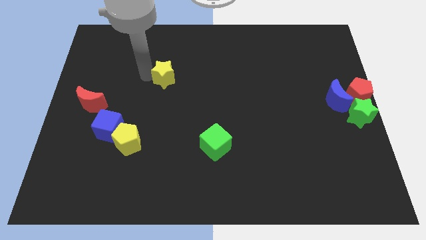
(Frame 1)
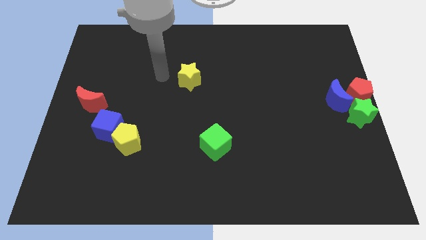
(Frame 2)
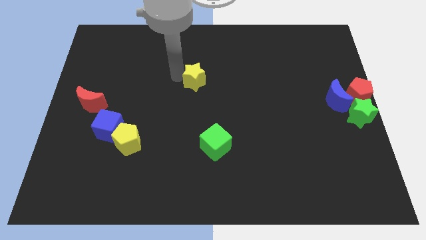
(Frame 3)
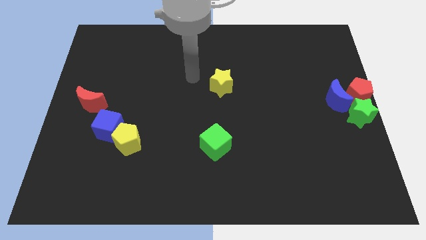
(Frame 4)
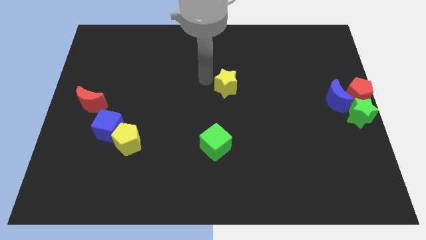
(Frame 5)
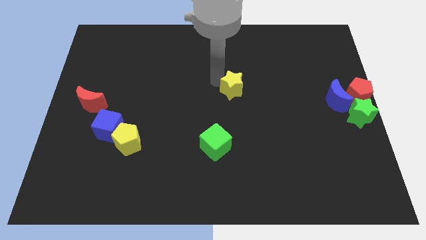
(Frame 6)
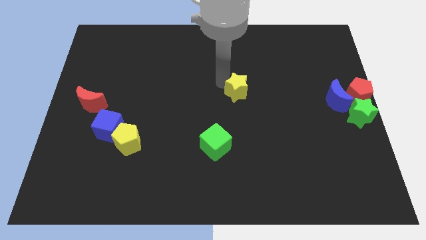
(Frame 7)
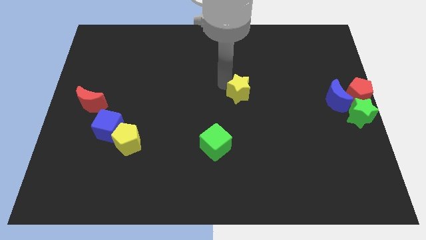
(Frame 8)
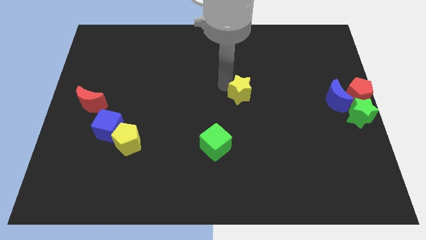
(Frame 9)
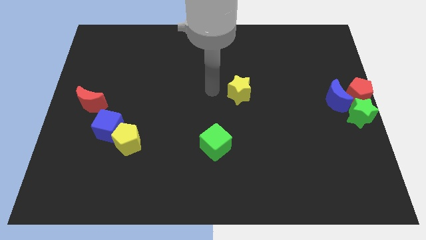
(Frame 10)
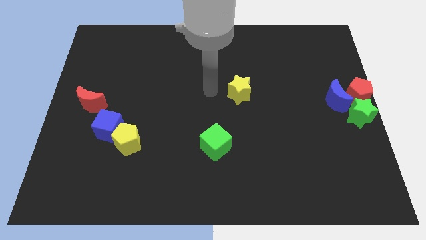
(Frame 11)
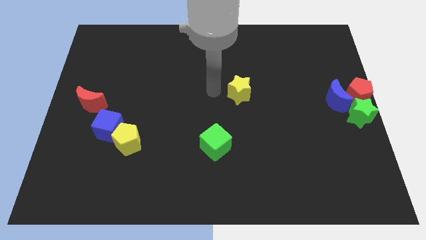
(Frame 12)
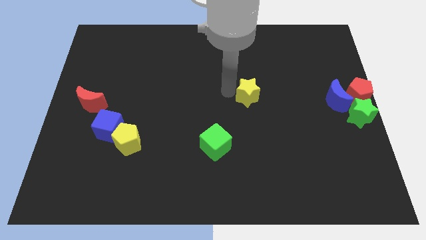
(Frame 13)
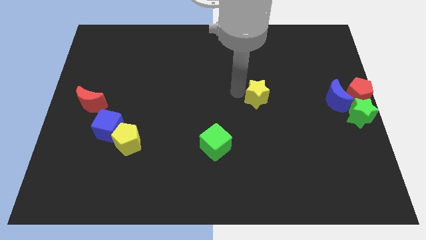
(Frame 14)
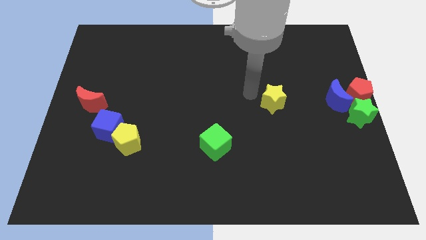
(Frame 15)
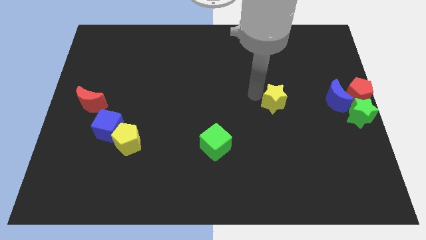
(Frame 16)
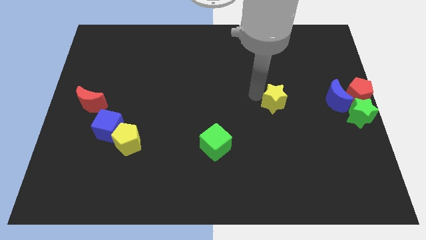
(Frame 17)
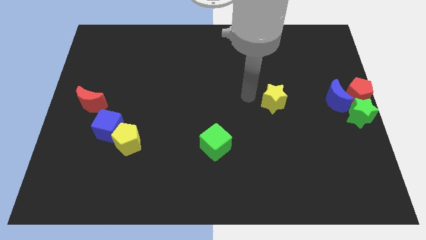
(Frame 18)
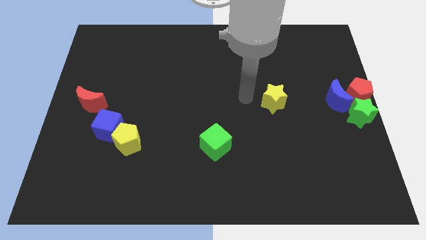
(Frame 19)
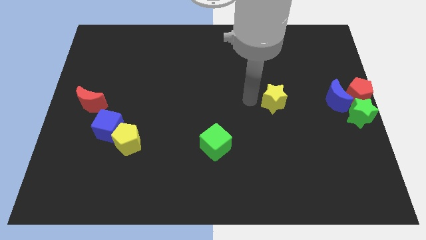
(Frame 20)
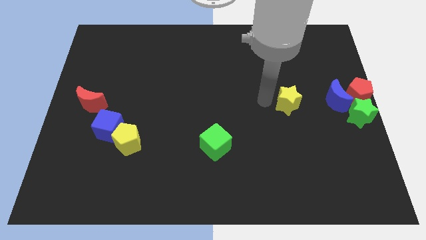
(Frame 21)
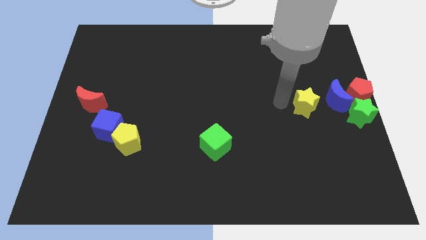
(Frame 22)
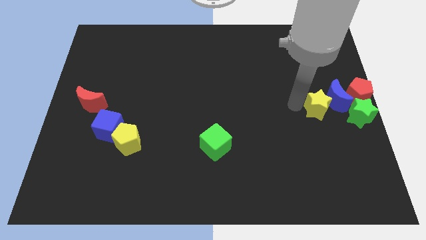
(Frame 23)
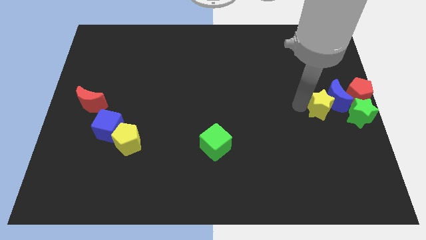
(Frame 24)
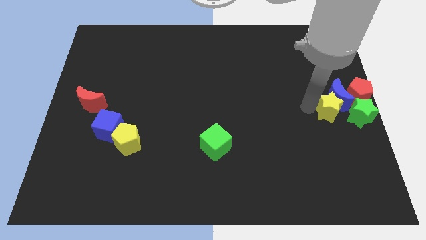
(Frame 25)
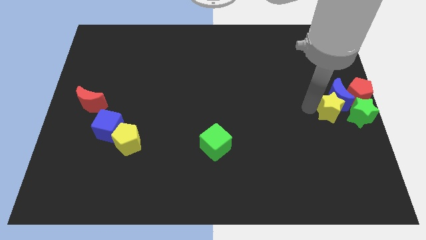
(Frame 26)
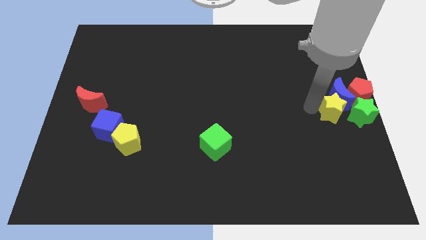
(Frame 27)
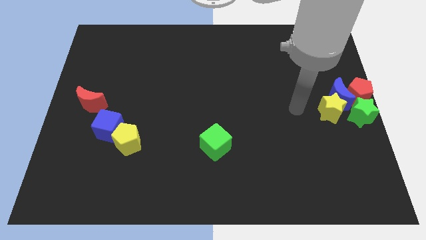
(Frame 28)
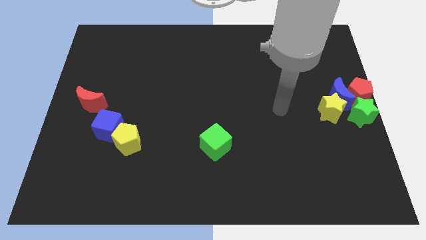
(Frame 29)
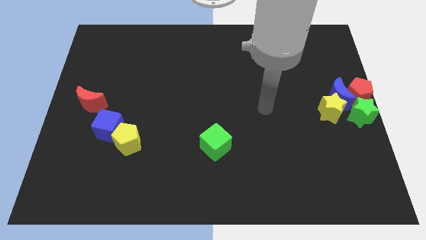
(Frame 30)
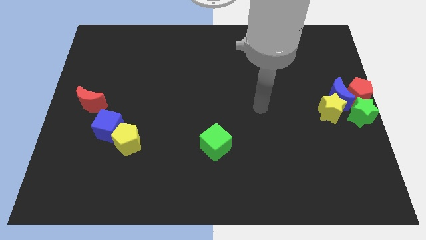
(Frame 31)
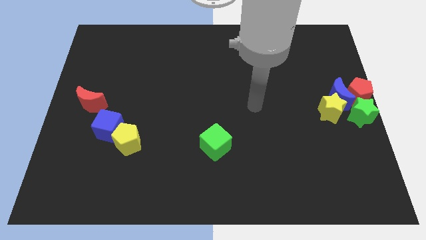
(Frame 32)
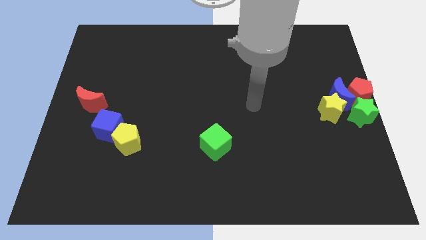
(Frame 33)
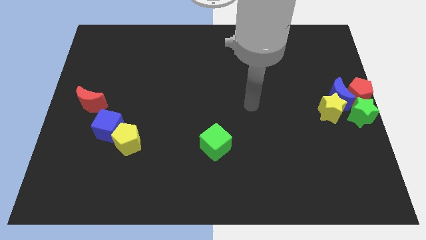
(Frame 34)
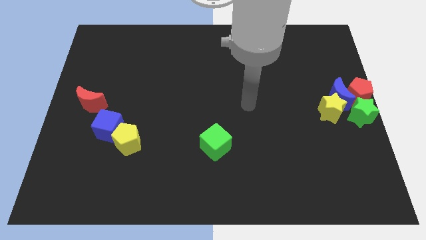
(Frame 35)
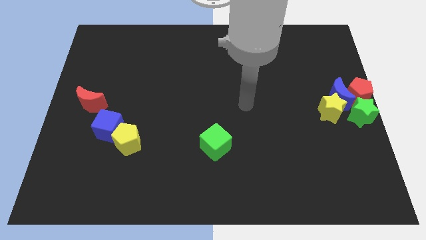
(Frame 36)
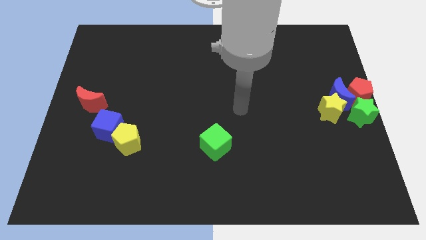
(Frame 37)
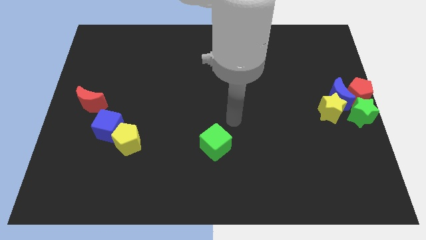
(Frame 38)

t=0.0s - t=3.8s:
place yellow star to the bottom of blue moon

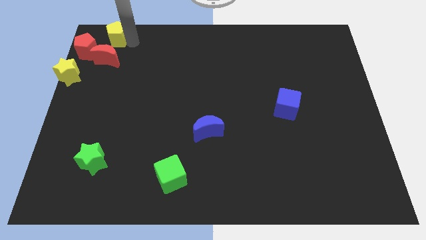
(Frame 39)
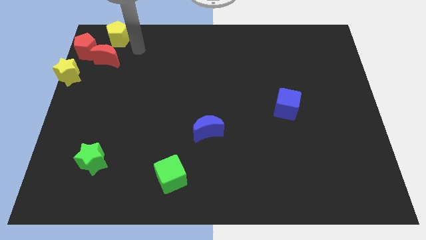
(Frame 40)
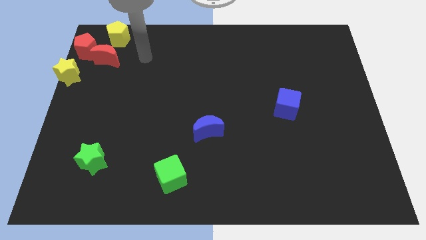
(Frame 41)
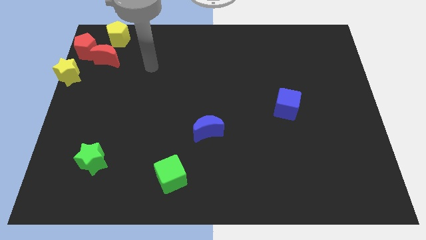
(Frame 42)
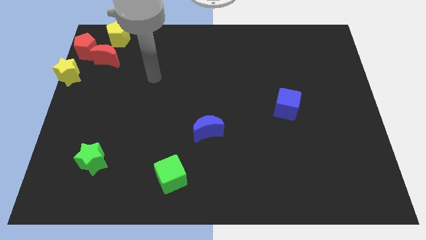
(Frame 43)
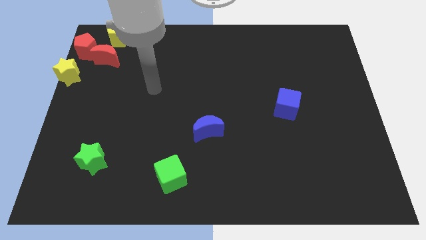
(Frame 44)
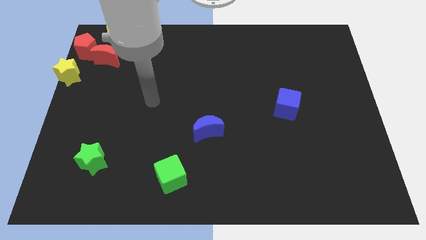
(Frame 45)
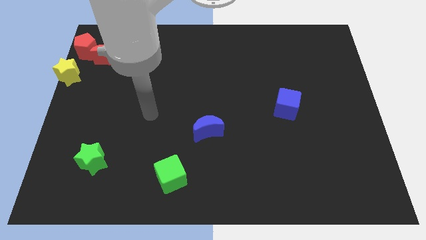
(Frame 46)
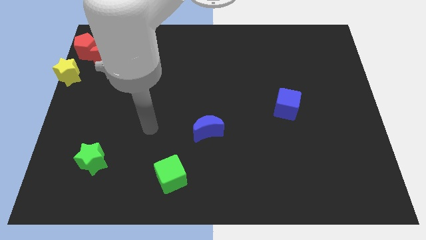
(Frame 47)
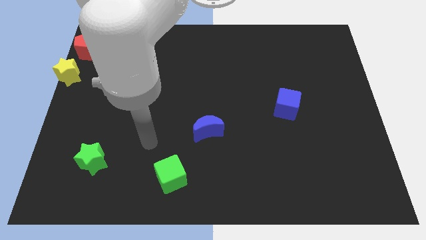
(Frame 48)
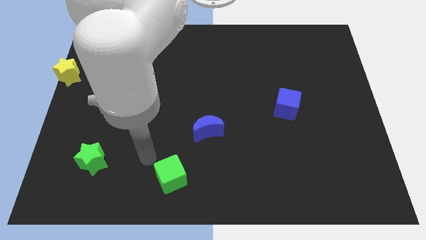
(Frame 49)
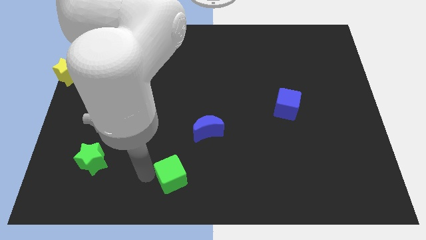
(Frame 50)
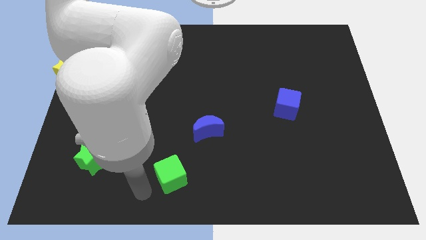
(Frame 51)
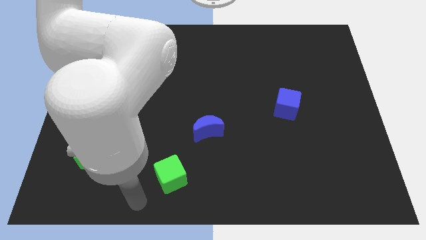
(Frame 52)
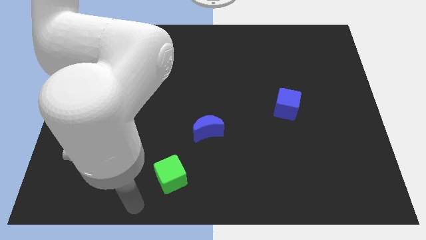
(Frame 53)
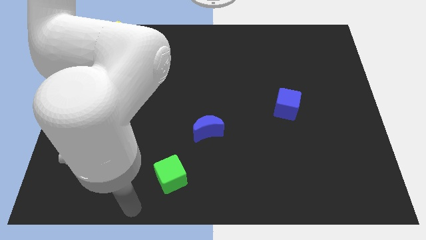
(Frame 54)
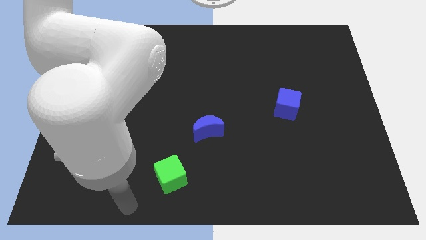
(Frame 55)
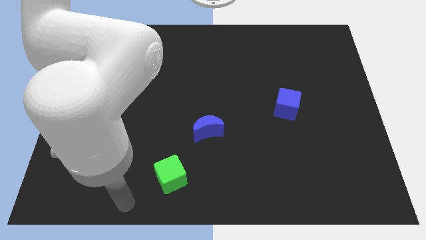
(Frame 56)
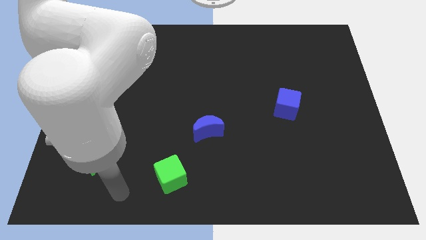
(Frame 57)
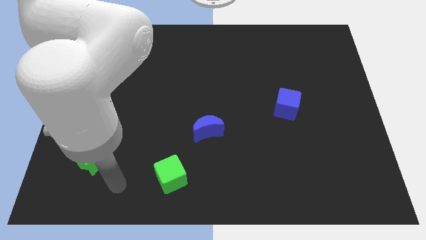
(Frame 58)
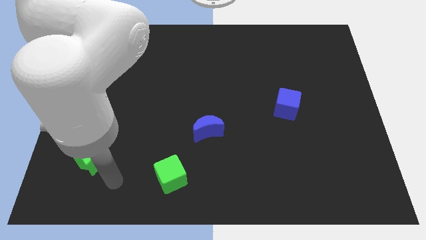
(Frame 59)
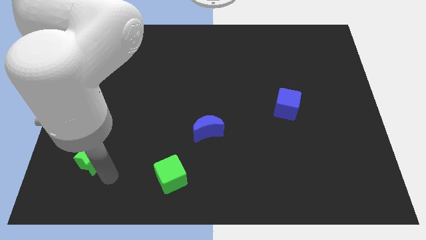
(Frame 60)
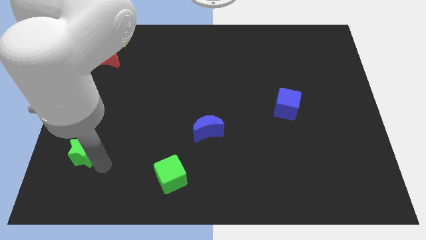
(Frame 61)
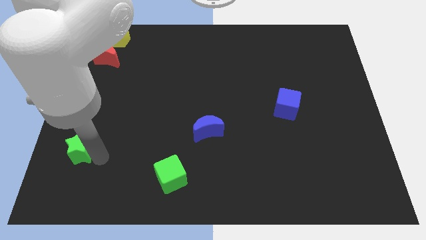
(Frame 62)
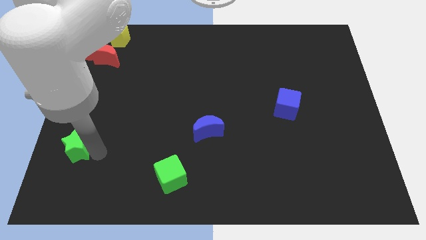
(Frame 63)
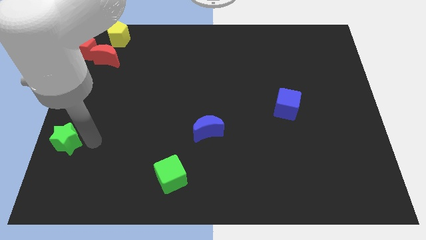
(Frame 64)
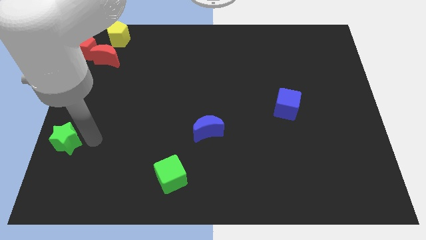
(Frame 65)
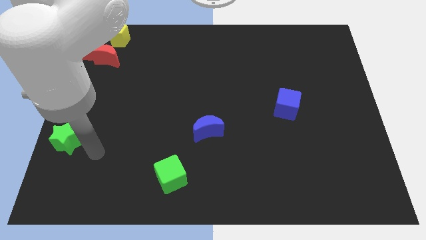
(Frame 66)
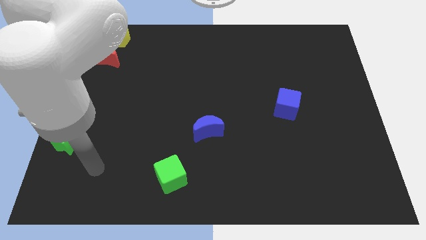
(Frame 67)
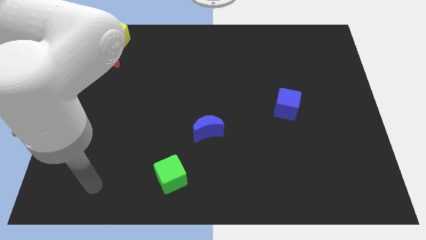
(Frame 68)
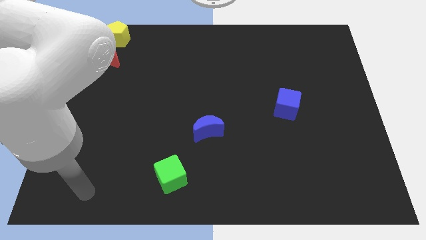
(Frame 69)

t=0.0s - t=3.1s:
move your arm below to the green star

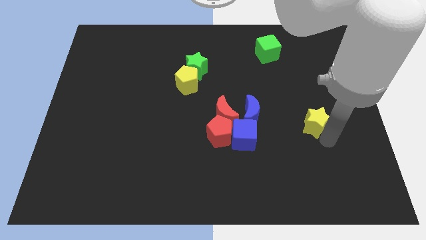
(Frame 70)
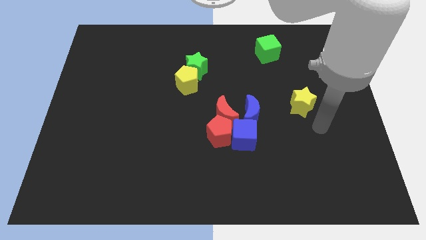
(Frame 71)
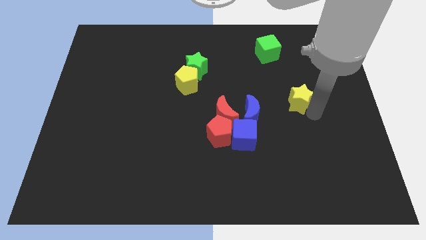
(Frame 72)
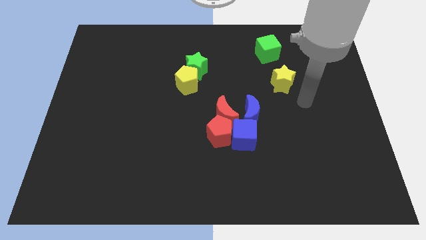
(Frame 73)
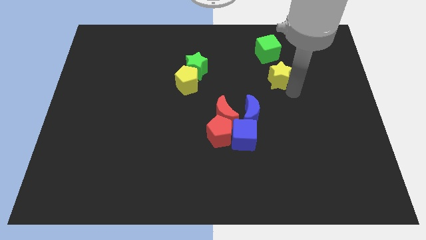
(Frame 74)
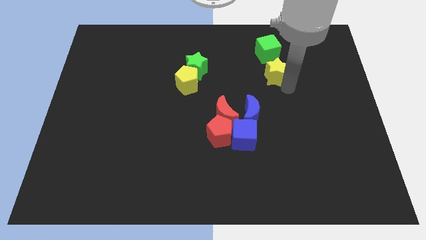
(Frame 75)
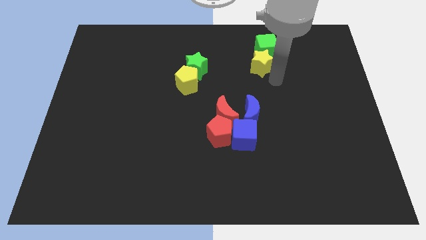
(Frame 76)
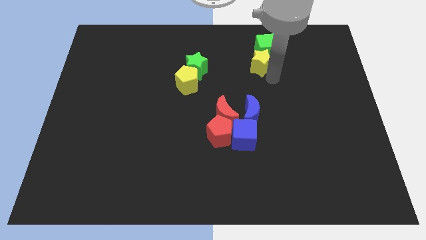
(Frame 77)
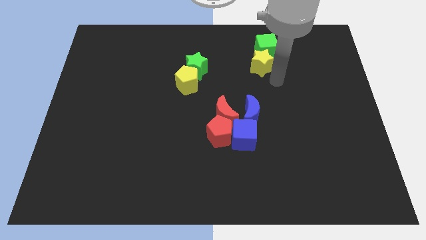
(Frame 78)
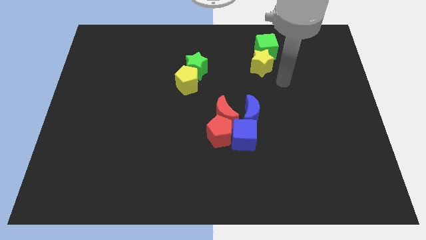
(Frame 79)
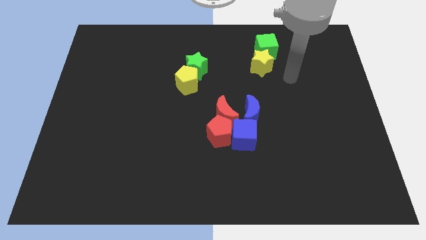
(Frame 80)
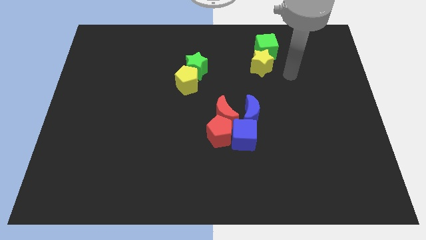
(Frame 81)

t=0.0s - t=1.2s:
push yellow star below green cube

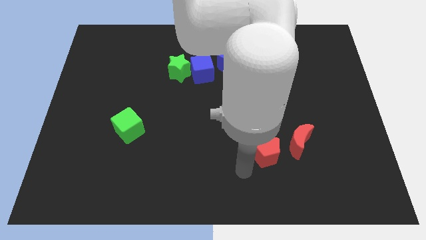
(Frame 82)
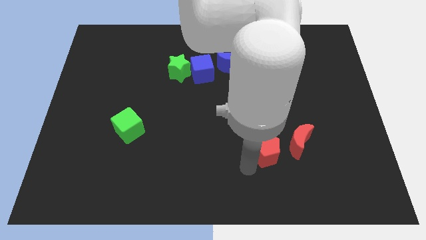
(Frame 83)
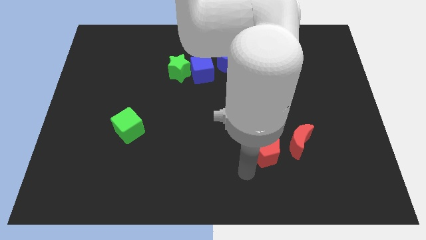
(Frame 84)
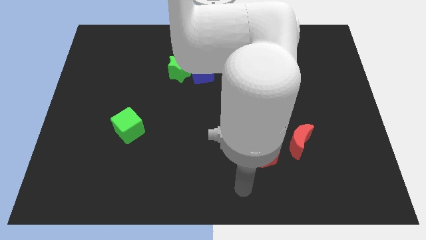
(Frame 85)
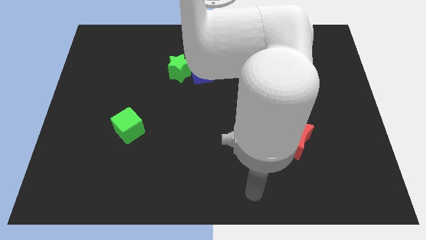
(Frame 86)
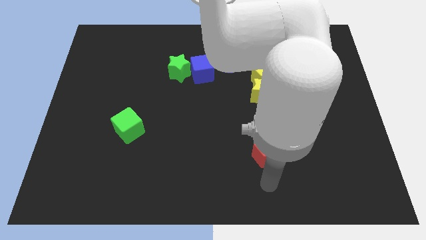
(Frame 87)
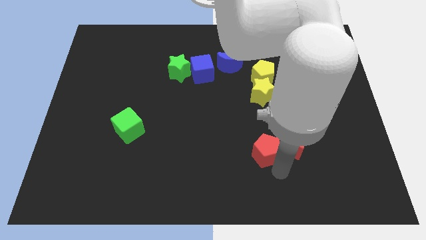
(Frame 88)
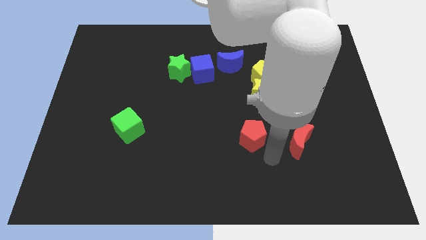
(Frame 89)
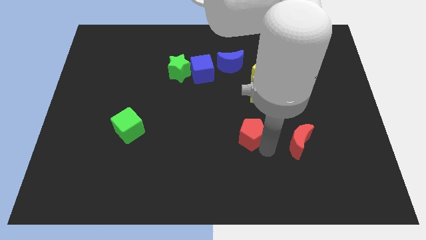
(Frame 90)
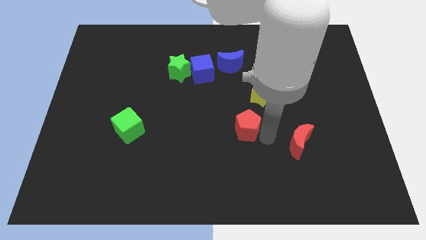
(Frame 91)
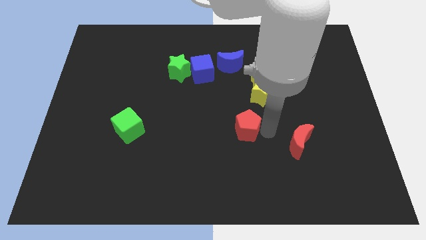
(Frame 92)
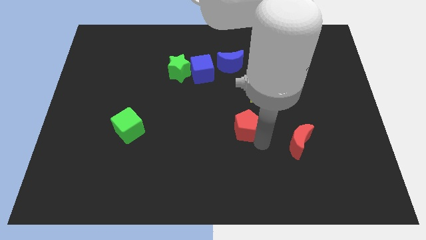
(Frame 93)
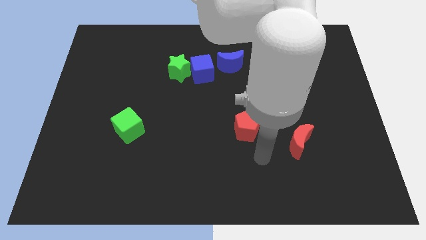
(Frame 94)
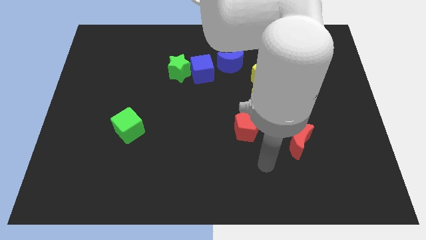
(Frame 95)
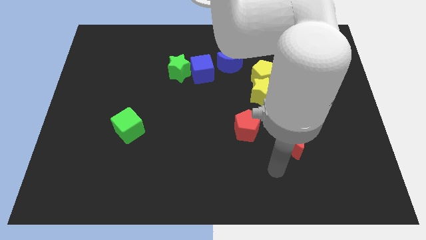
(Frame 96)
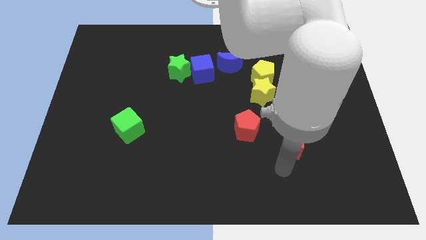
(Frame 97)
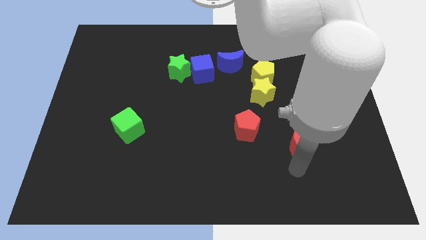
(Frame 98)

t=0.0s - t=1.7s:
slide the red pentagon up parallel to green cube
